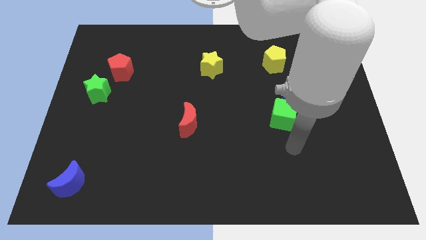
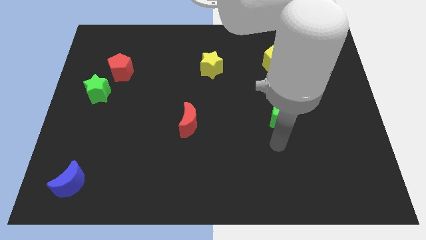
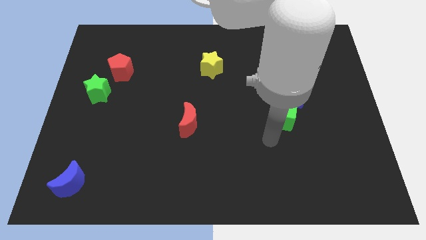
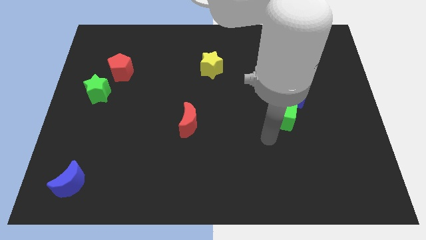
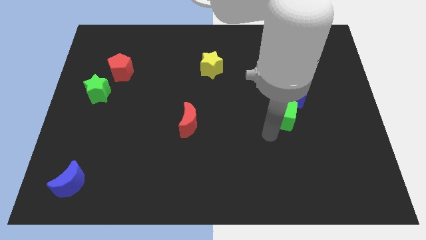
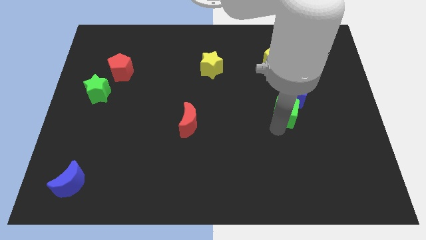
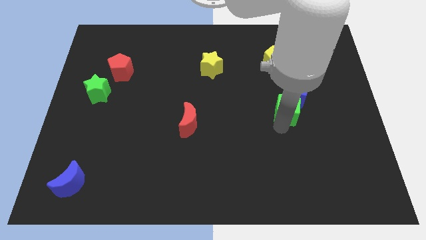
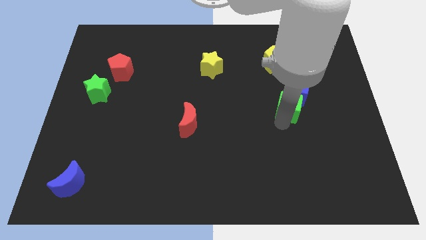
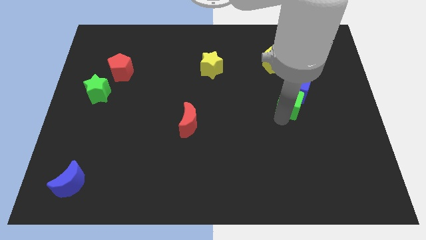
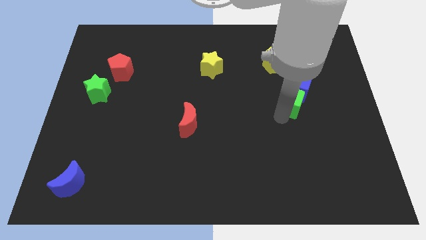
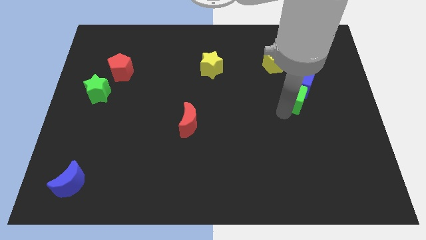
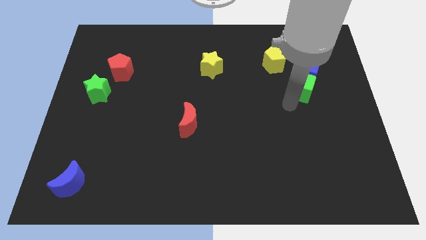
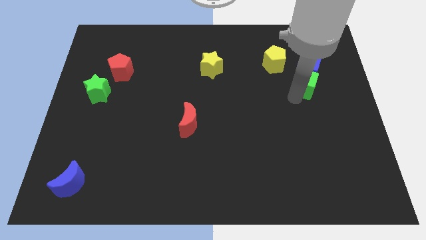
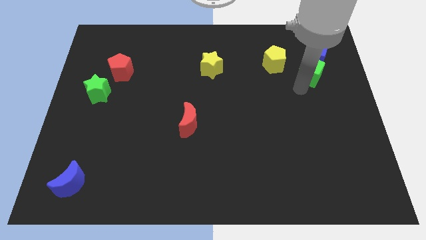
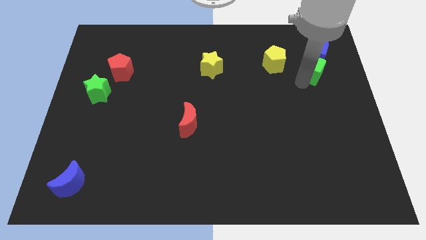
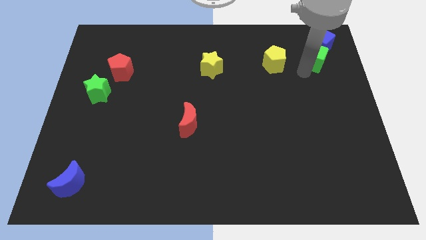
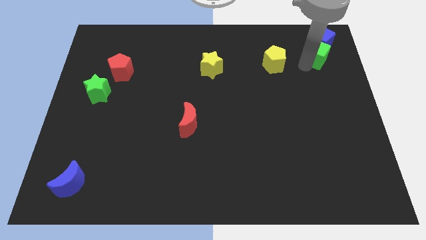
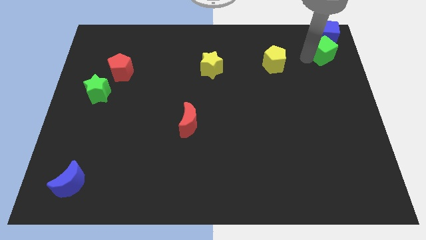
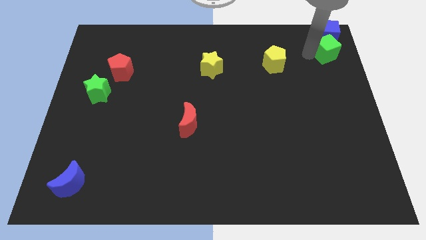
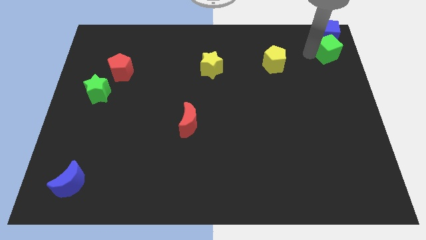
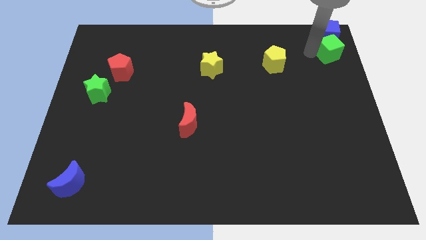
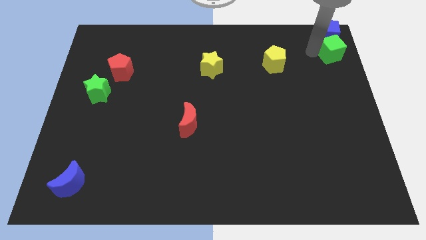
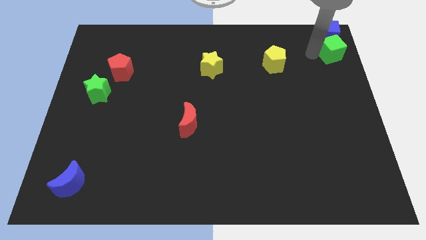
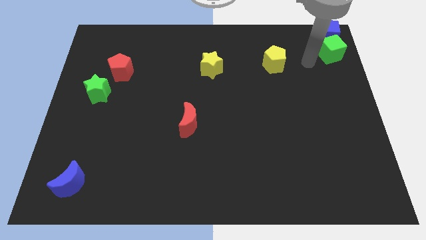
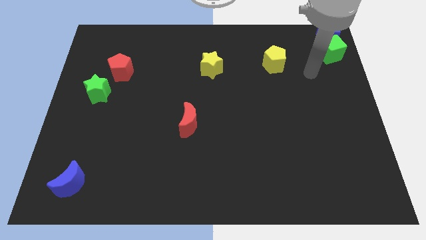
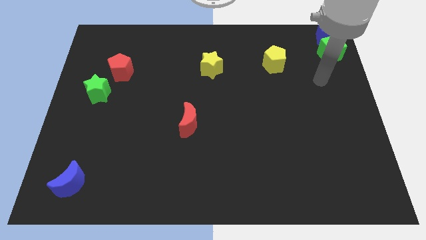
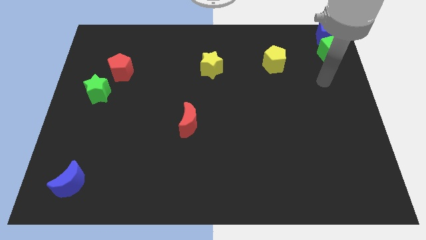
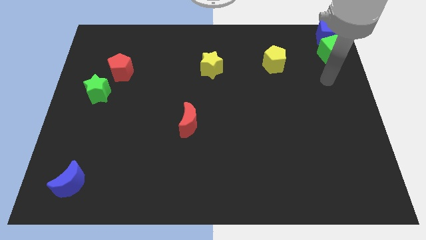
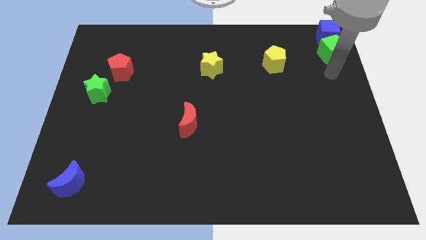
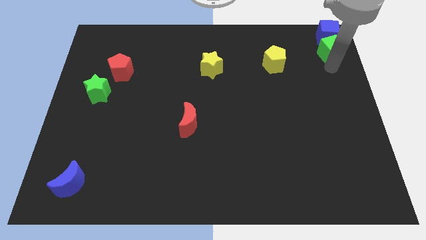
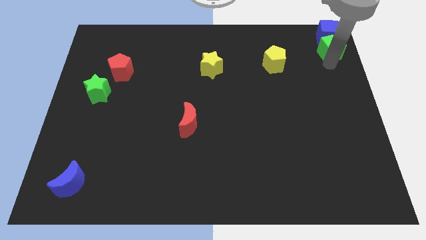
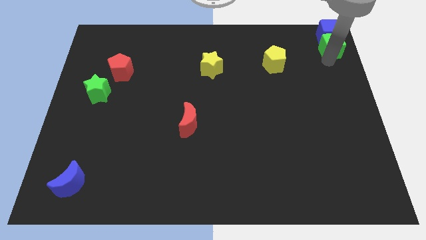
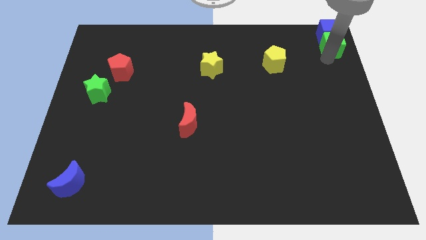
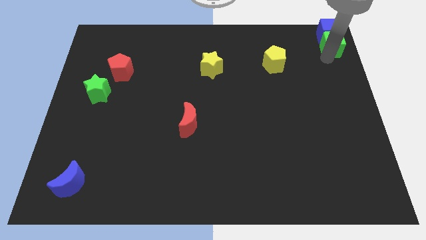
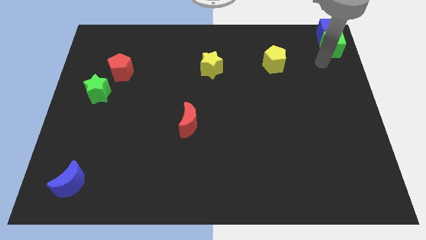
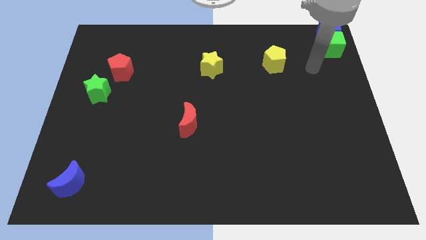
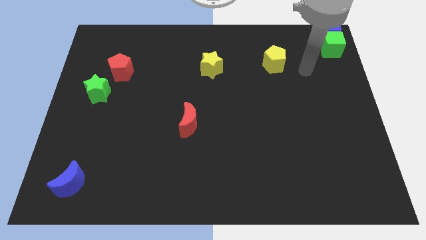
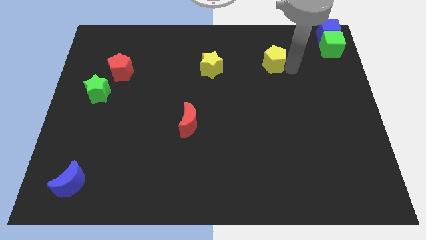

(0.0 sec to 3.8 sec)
push the green cube and blue cube to the top right

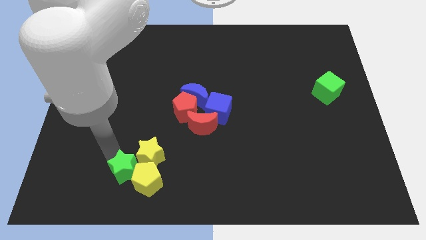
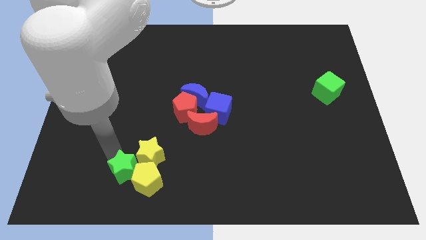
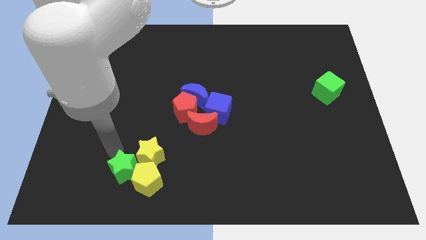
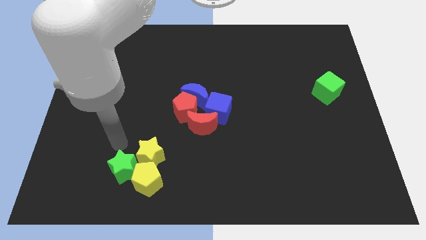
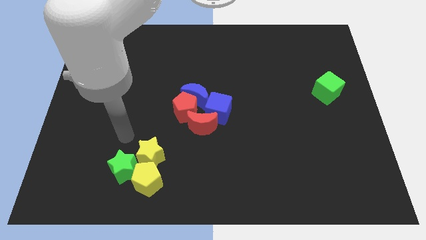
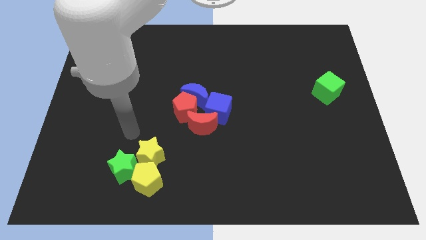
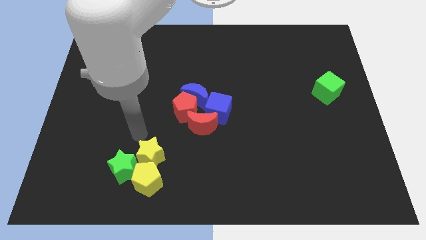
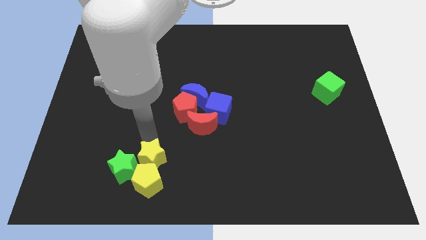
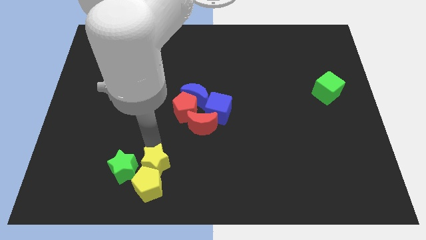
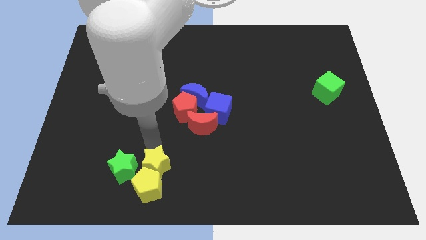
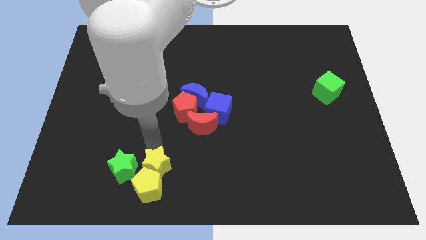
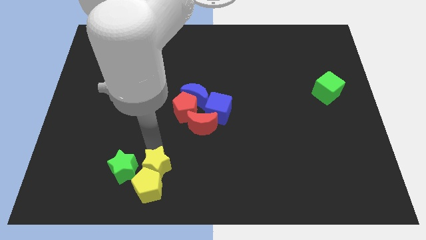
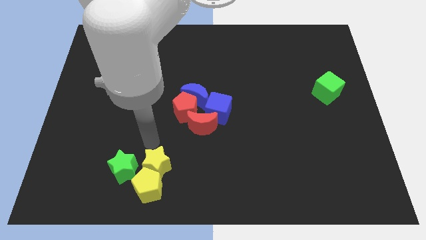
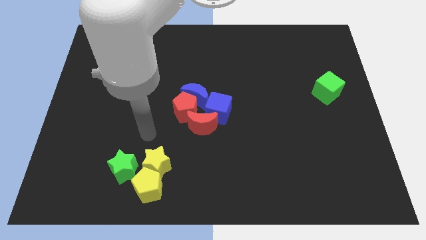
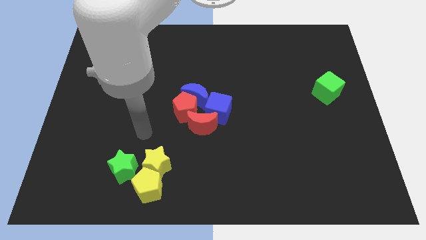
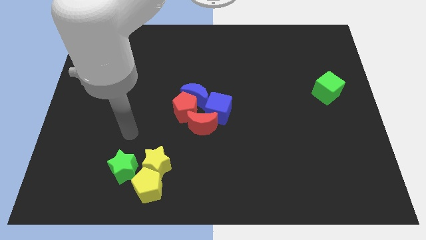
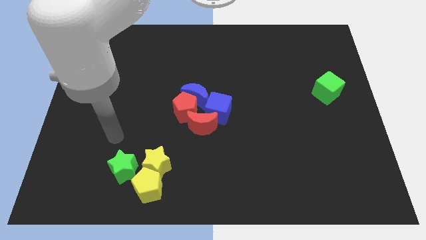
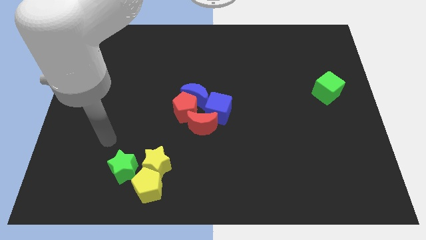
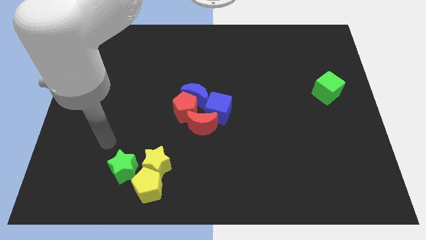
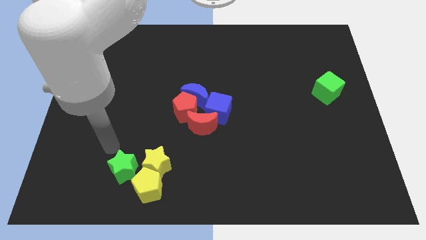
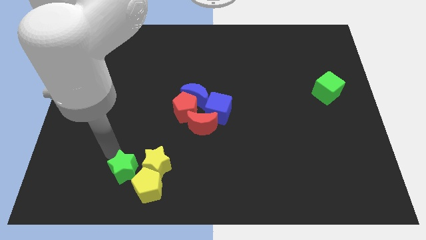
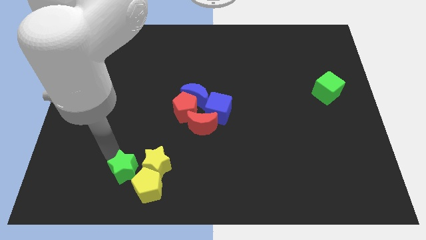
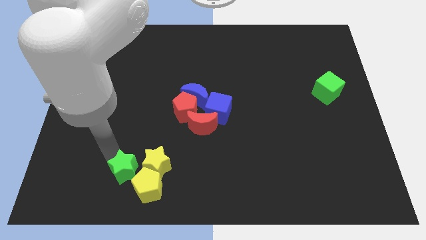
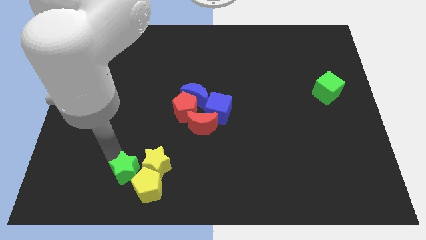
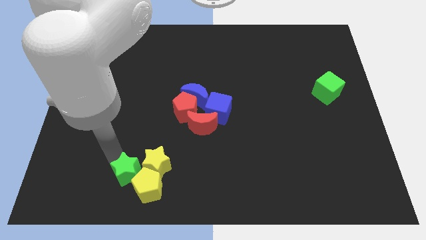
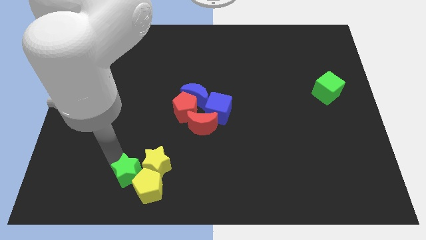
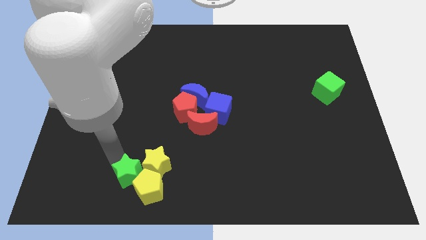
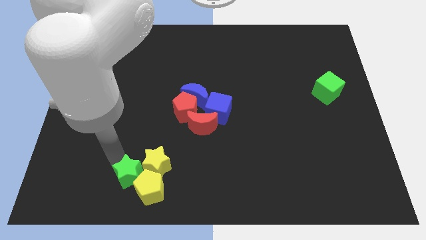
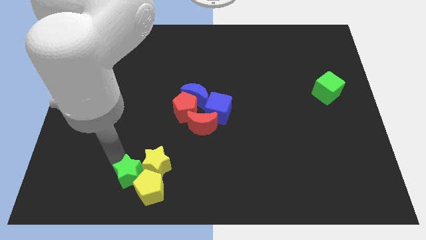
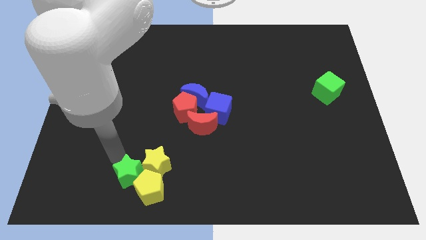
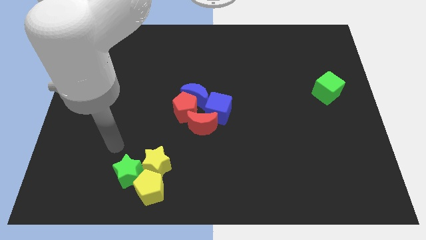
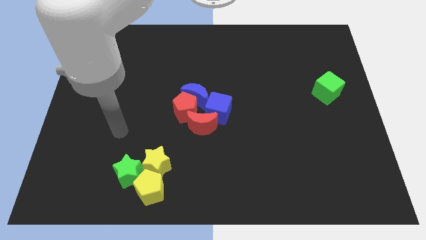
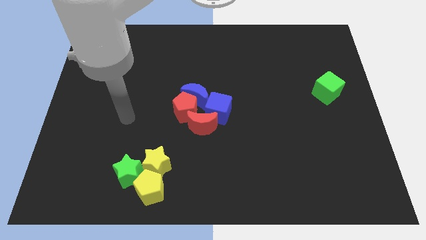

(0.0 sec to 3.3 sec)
move the group of blocks to the bottom left

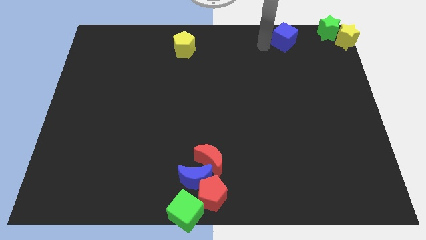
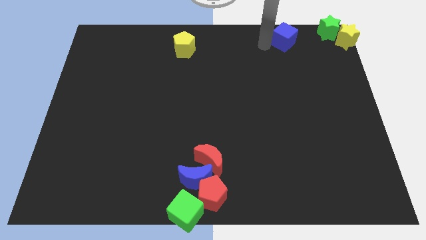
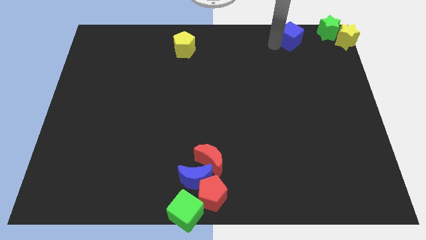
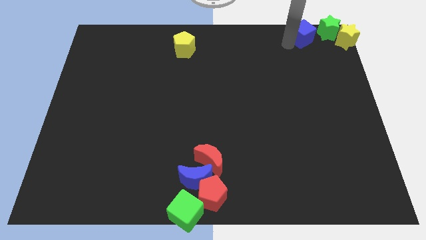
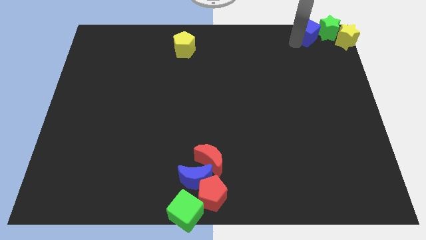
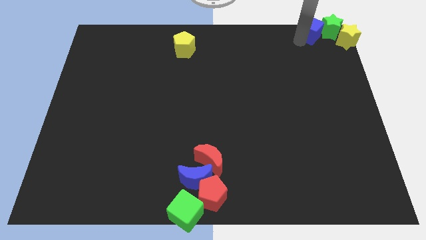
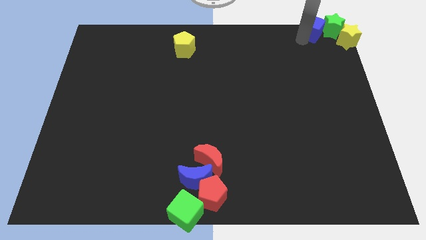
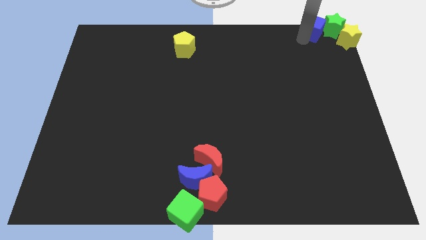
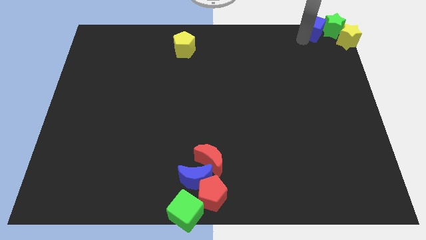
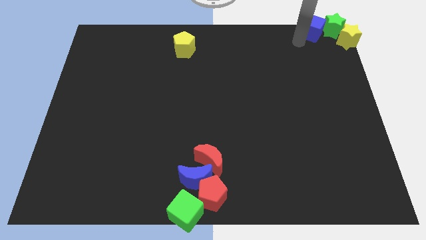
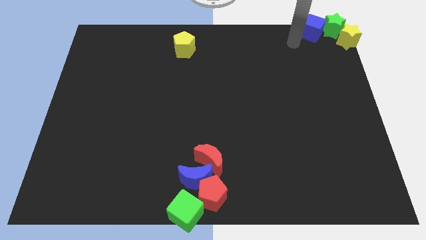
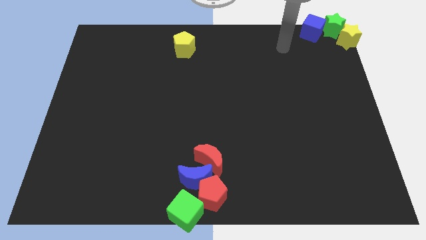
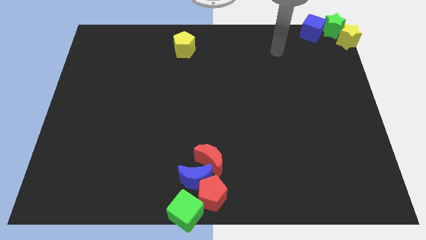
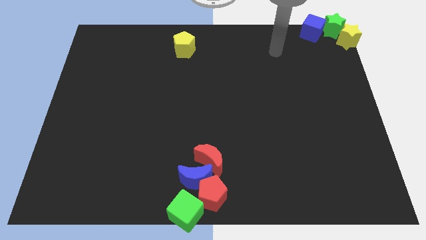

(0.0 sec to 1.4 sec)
move the blue cube to the top right of the board

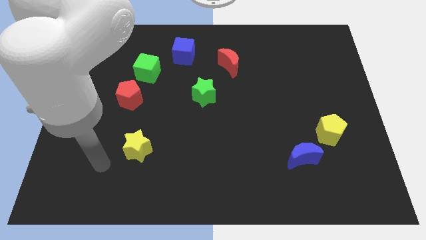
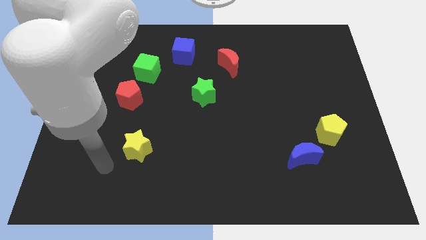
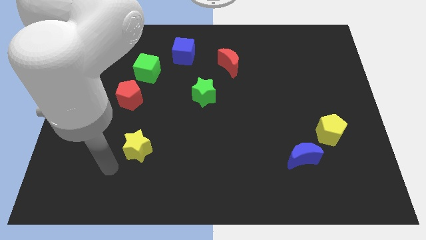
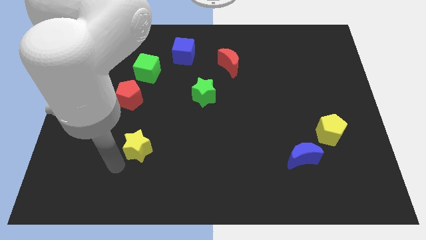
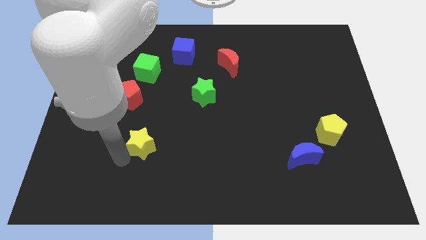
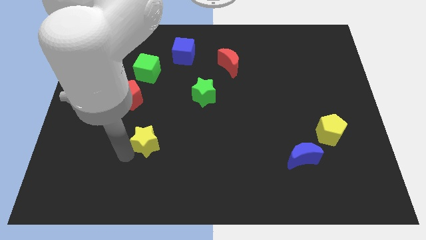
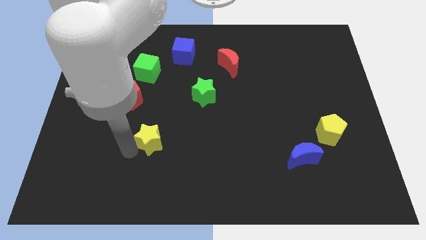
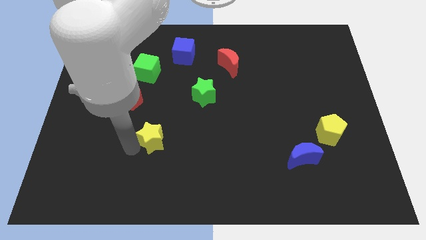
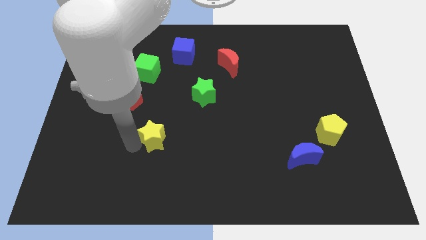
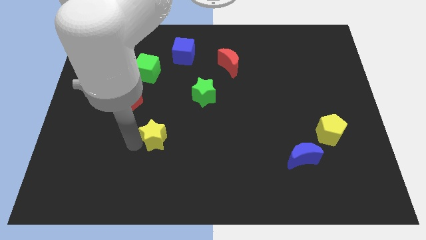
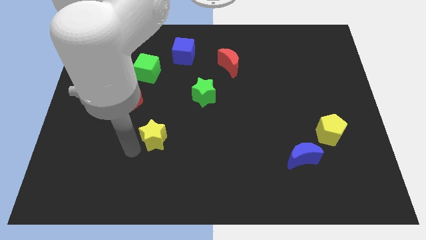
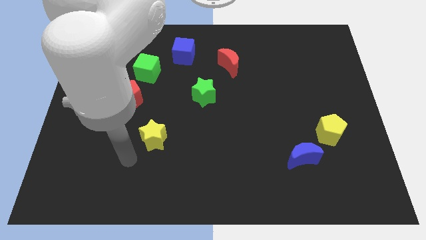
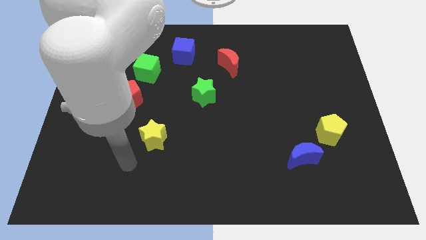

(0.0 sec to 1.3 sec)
place the yellow star diagonal to the red pentagon
